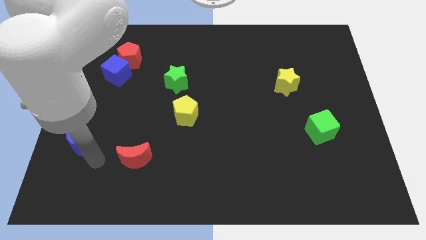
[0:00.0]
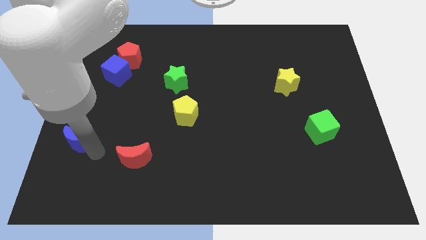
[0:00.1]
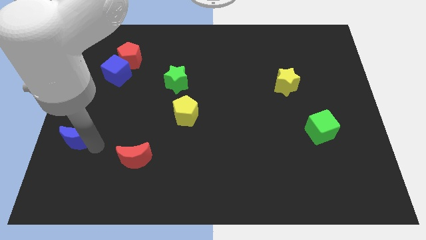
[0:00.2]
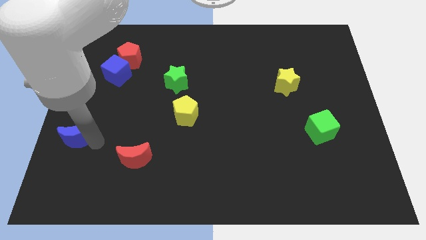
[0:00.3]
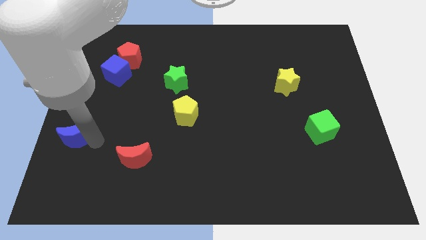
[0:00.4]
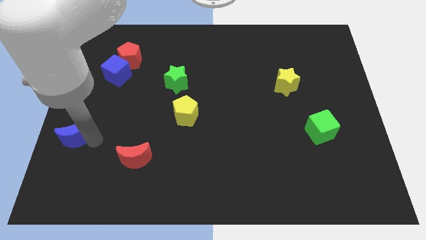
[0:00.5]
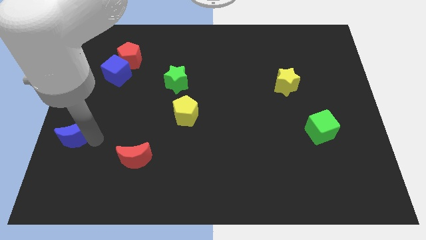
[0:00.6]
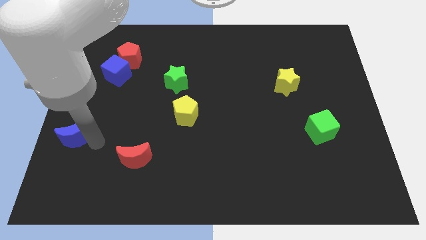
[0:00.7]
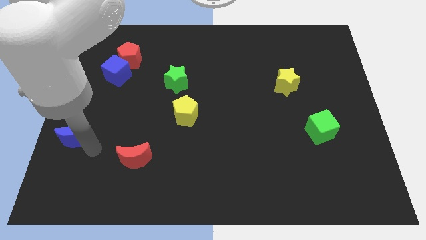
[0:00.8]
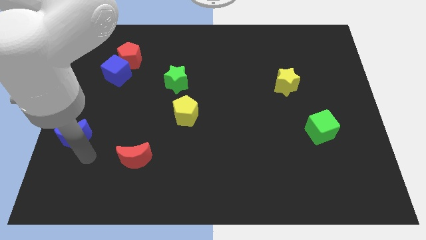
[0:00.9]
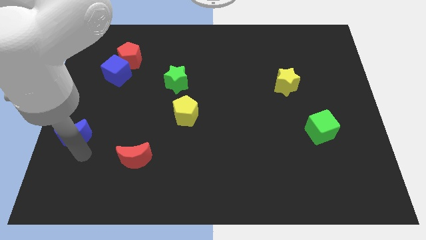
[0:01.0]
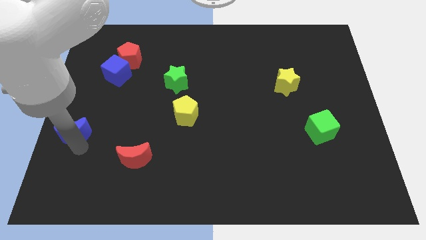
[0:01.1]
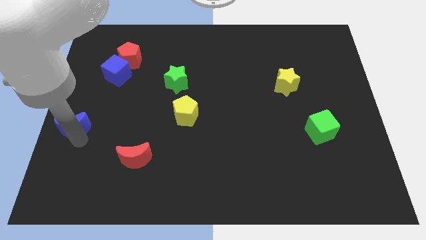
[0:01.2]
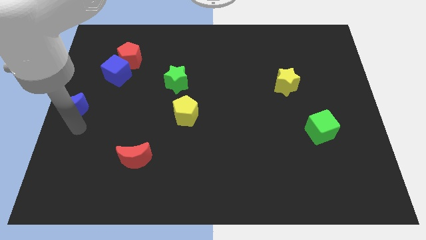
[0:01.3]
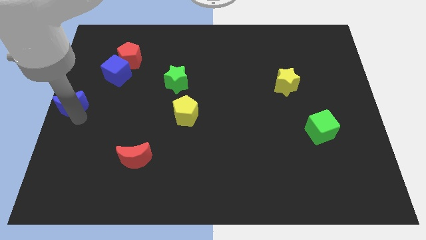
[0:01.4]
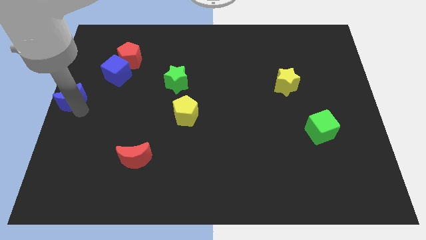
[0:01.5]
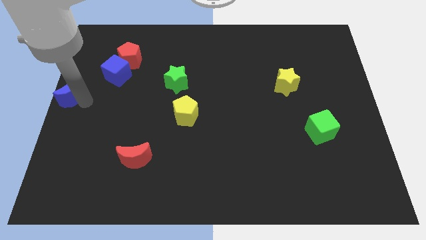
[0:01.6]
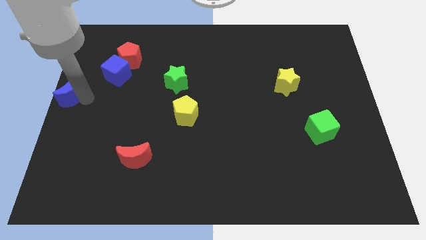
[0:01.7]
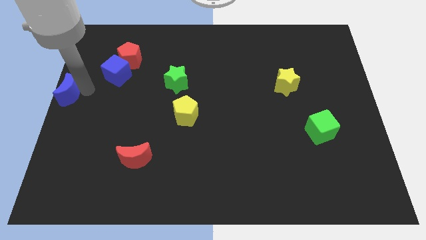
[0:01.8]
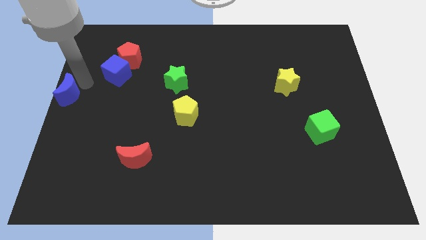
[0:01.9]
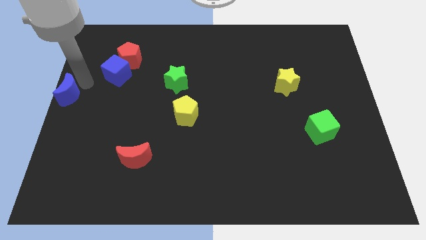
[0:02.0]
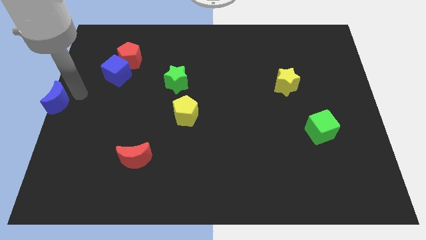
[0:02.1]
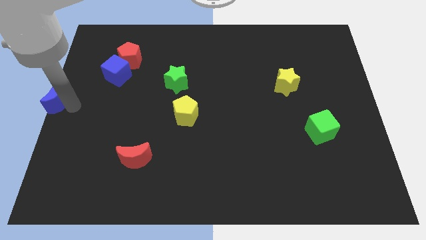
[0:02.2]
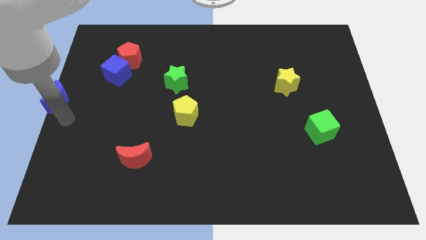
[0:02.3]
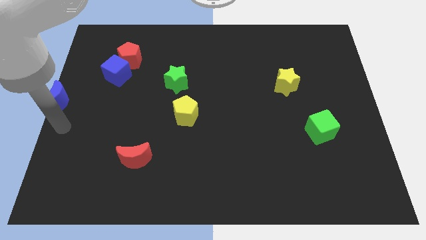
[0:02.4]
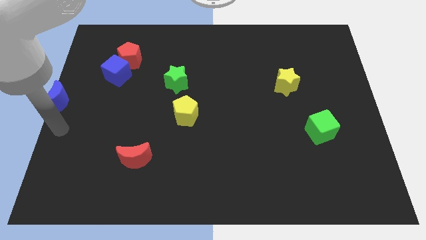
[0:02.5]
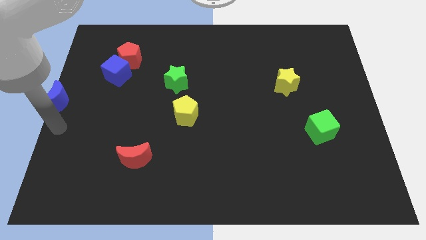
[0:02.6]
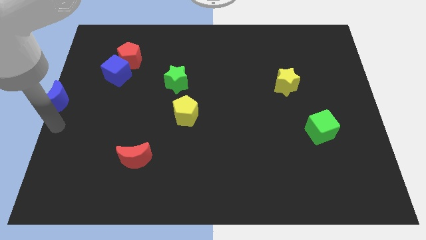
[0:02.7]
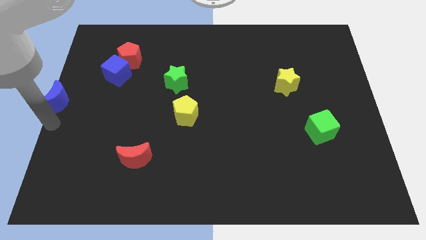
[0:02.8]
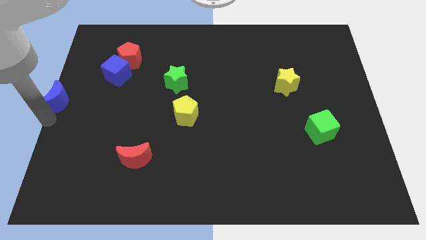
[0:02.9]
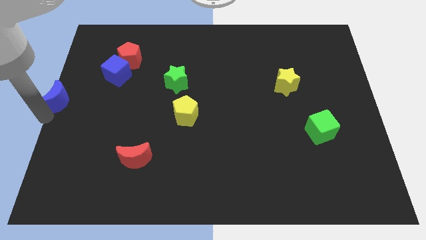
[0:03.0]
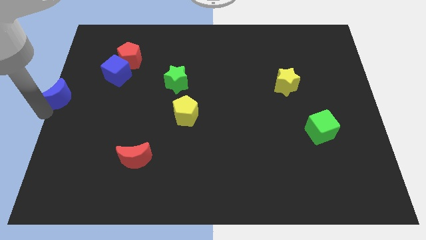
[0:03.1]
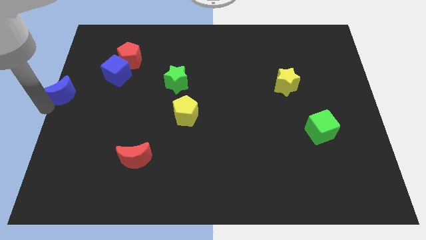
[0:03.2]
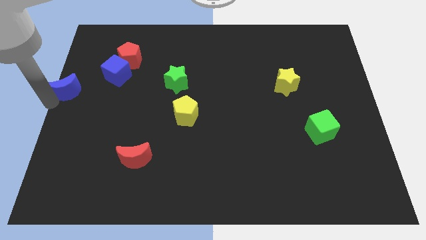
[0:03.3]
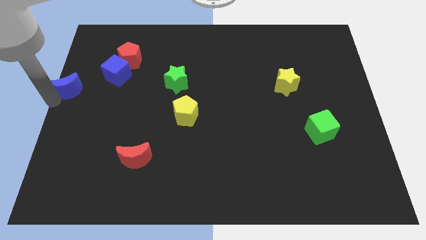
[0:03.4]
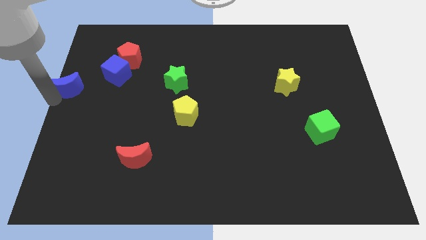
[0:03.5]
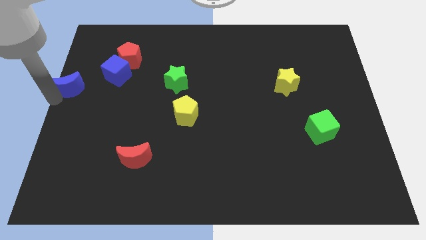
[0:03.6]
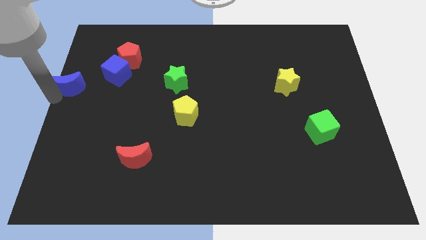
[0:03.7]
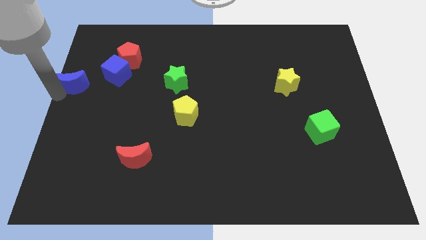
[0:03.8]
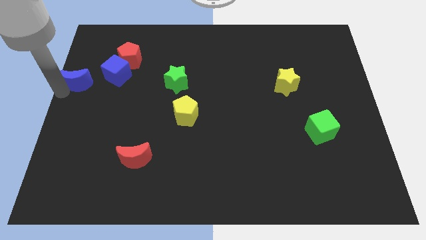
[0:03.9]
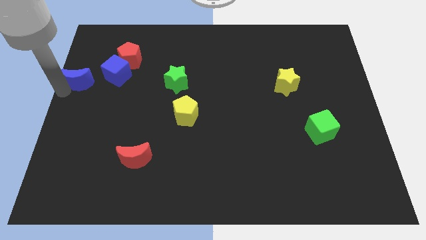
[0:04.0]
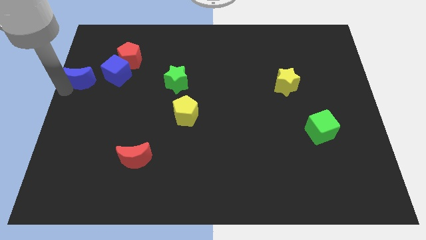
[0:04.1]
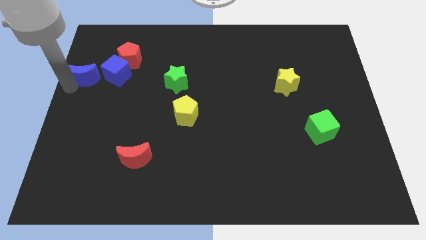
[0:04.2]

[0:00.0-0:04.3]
place blue moon to the left of the blue cube

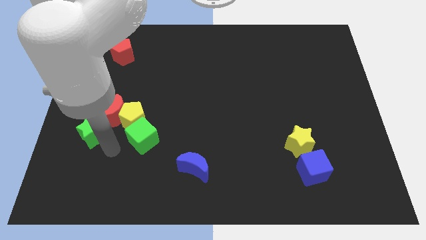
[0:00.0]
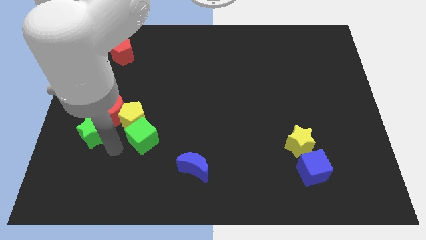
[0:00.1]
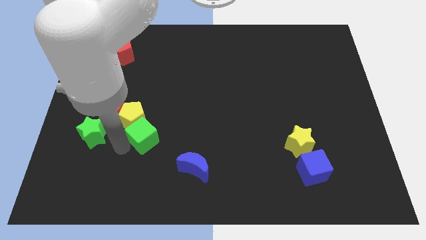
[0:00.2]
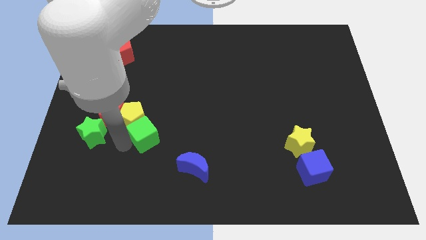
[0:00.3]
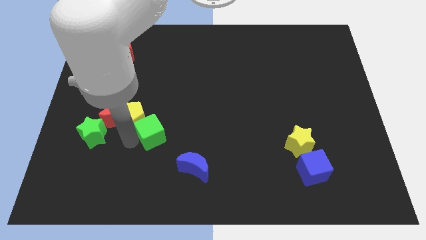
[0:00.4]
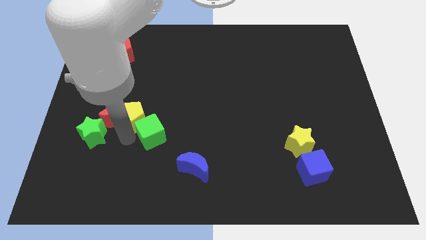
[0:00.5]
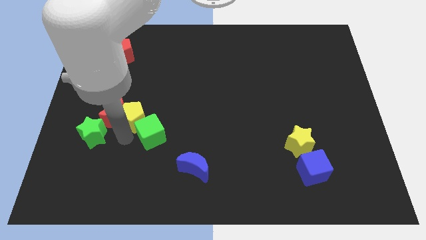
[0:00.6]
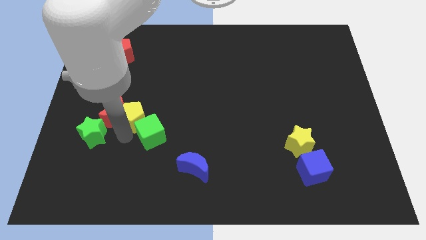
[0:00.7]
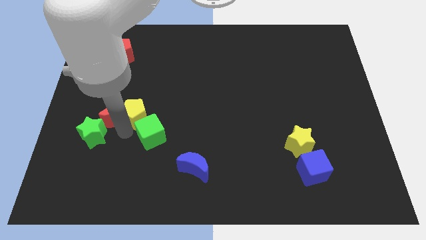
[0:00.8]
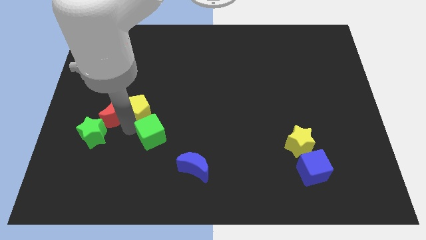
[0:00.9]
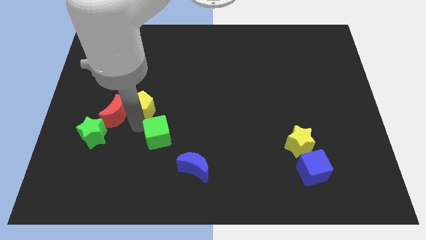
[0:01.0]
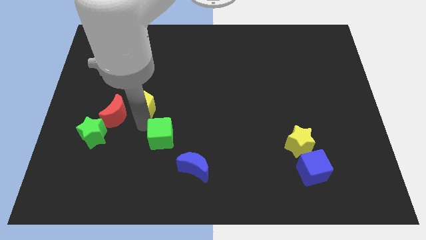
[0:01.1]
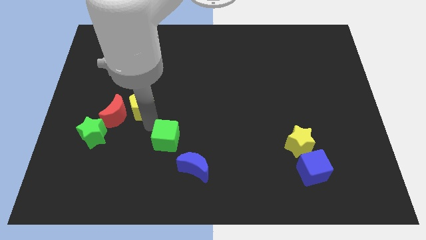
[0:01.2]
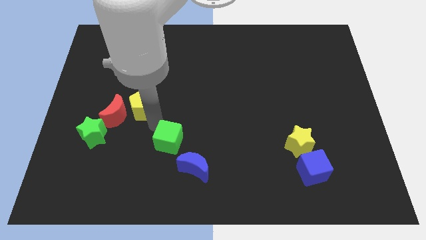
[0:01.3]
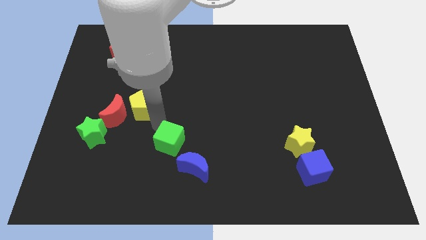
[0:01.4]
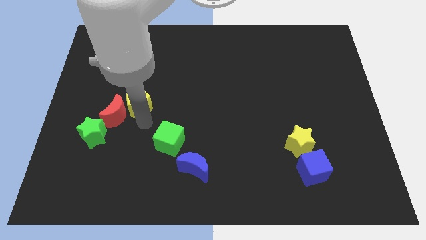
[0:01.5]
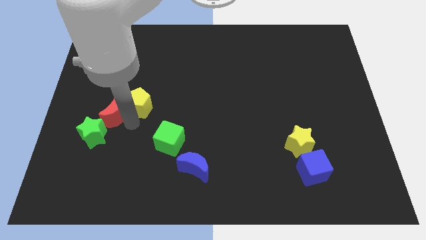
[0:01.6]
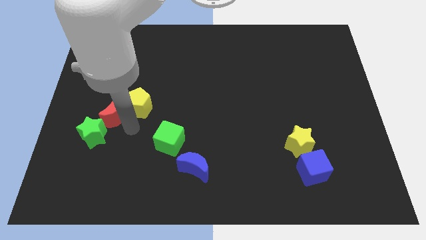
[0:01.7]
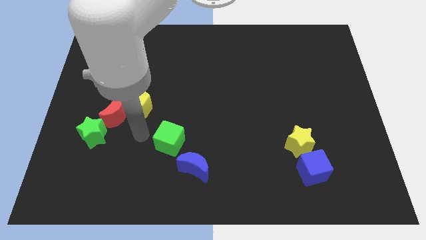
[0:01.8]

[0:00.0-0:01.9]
separate the green cube away from the group of blocks

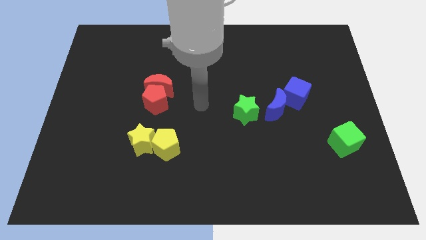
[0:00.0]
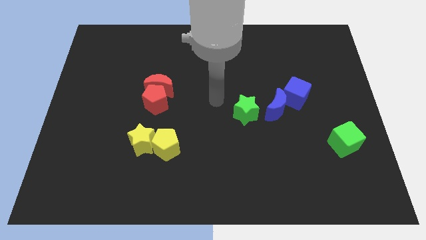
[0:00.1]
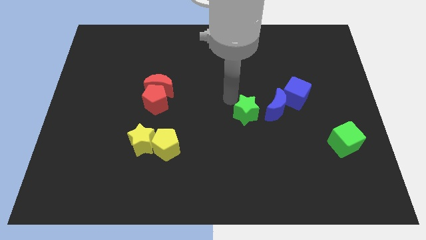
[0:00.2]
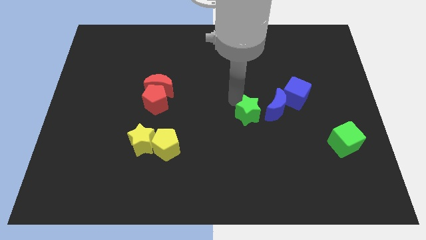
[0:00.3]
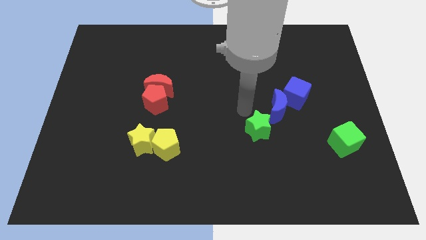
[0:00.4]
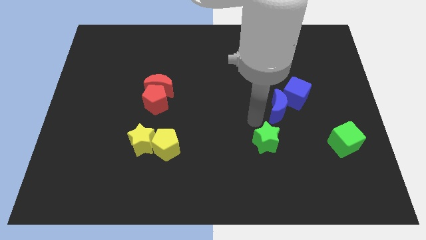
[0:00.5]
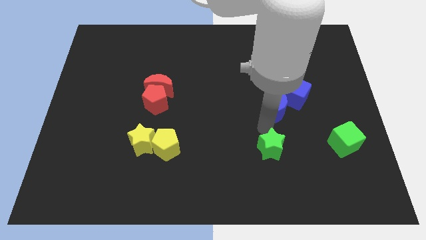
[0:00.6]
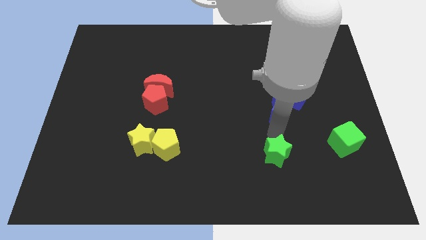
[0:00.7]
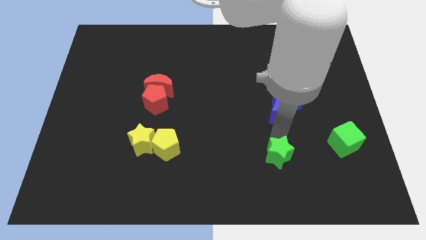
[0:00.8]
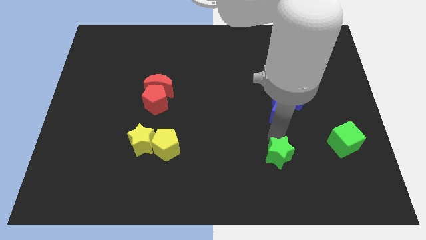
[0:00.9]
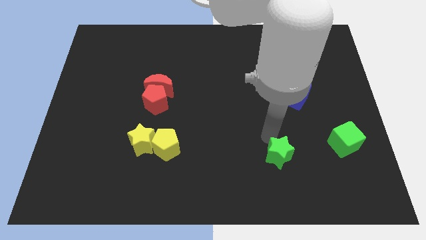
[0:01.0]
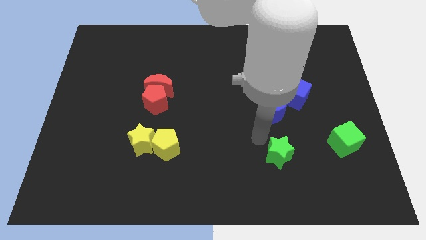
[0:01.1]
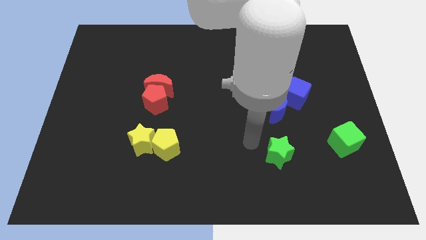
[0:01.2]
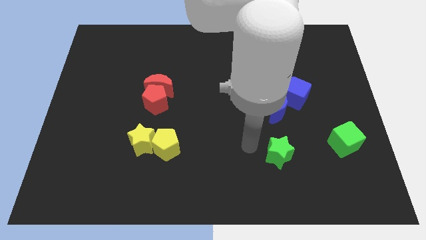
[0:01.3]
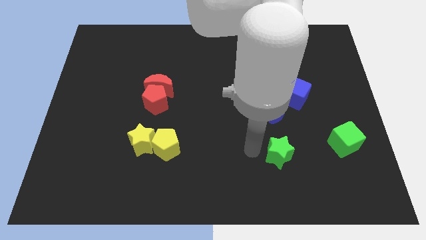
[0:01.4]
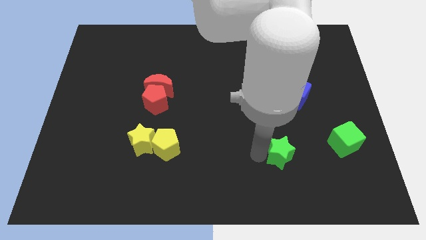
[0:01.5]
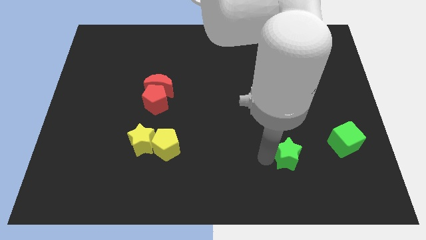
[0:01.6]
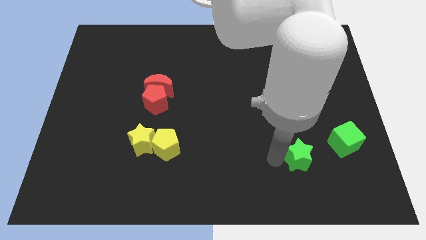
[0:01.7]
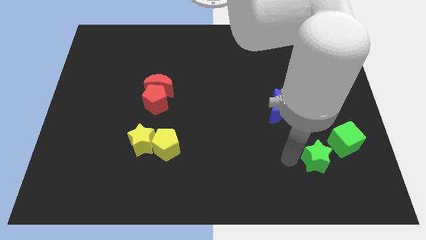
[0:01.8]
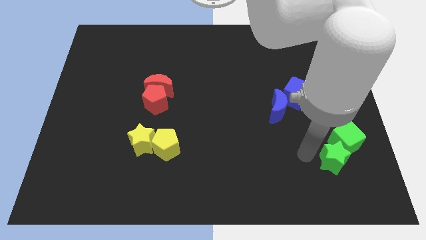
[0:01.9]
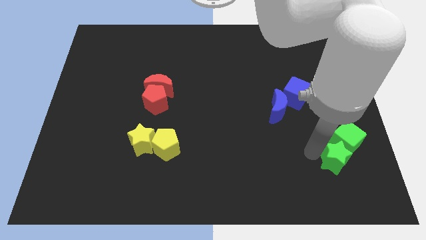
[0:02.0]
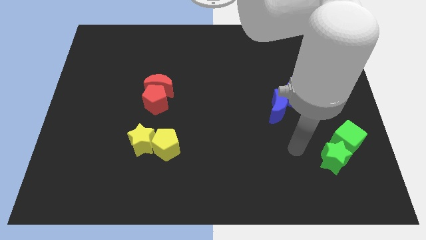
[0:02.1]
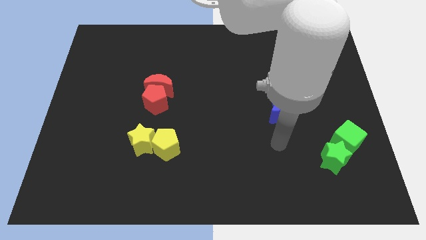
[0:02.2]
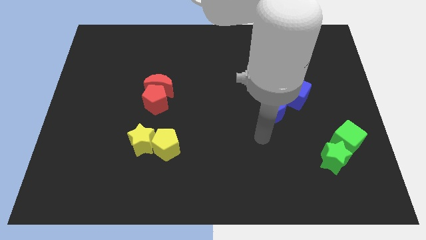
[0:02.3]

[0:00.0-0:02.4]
push the green star close to the green cube

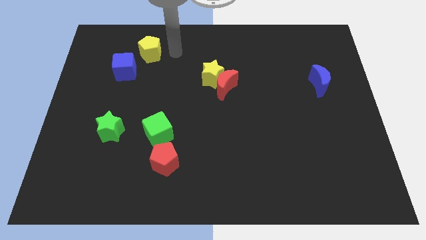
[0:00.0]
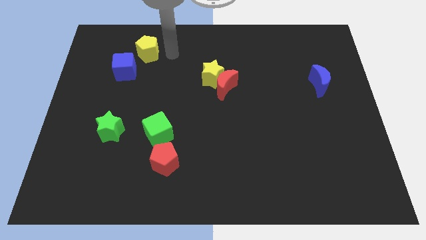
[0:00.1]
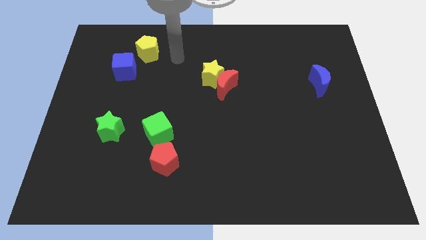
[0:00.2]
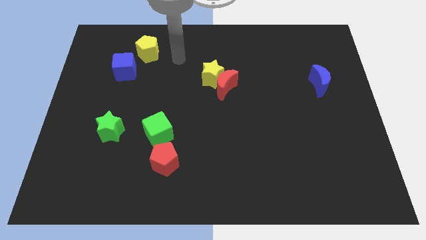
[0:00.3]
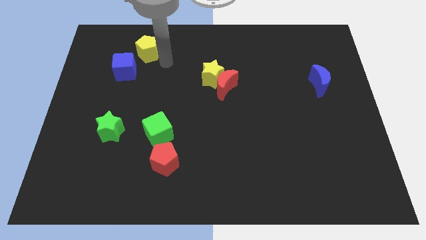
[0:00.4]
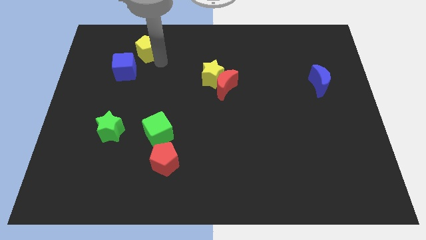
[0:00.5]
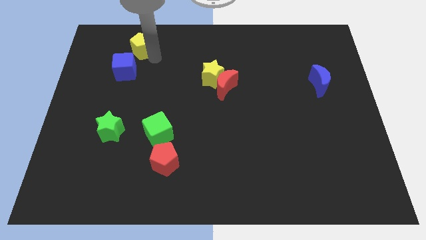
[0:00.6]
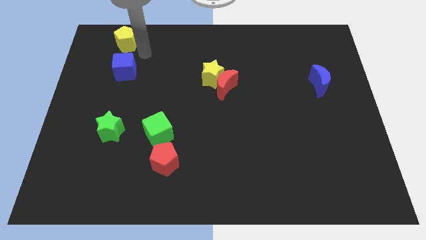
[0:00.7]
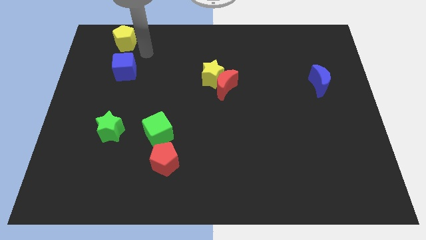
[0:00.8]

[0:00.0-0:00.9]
push the yellow pentagon on the top of the blue cube
